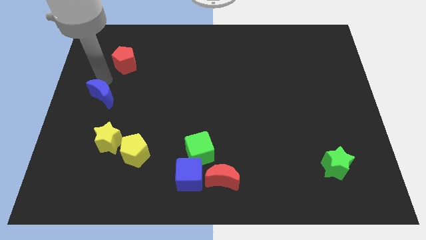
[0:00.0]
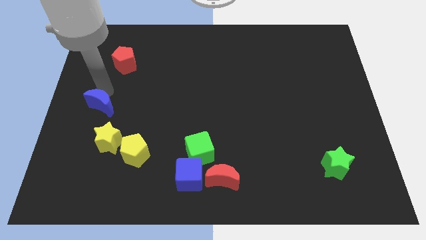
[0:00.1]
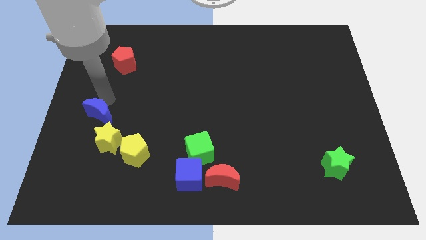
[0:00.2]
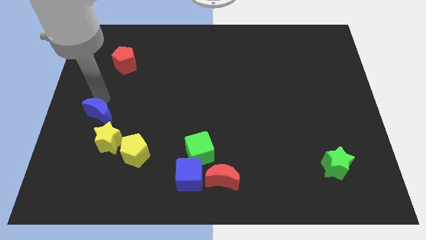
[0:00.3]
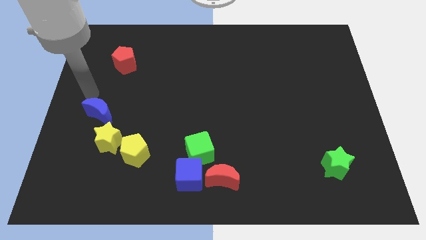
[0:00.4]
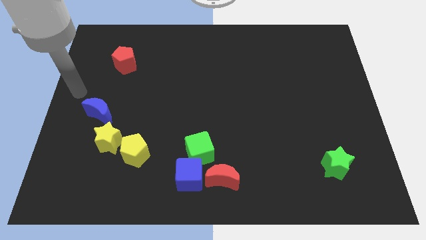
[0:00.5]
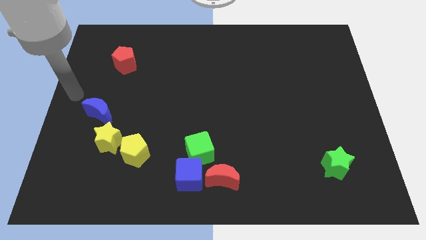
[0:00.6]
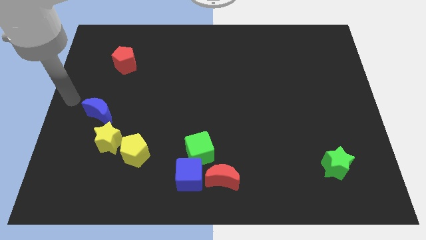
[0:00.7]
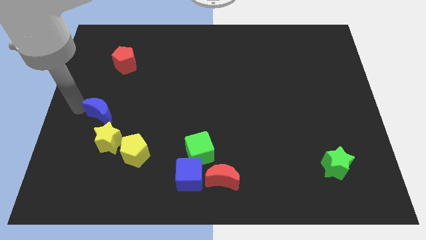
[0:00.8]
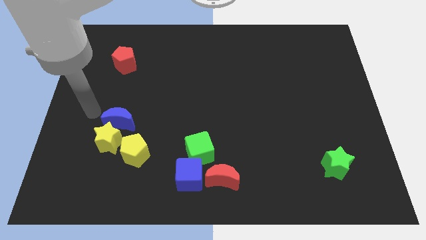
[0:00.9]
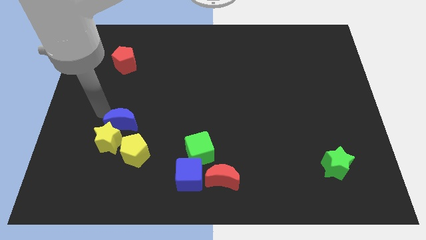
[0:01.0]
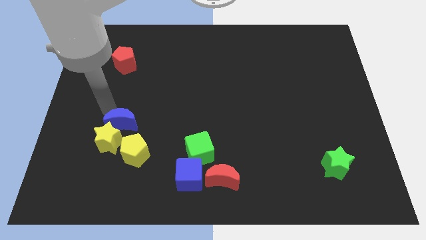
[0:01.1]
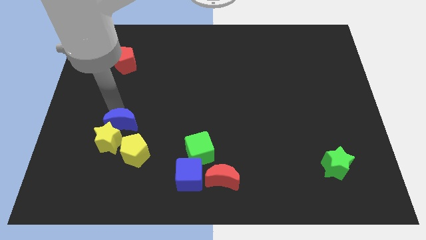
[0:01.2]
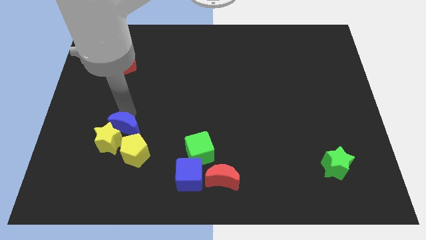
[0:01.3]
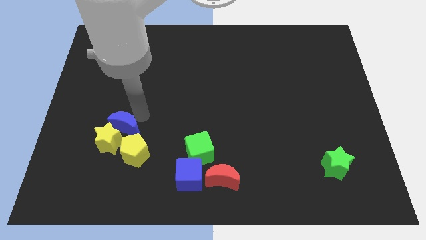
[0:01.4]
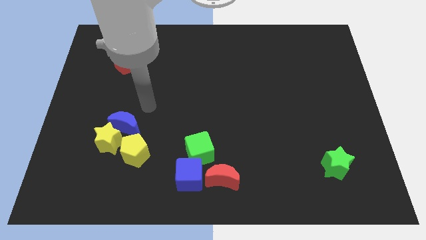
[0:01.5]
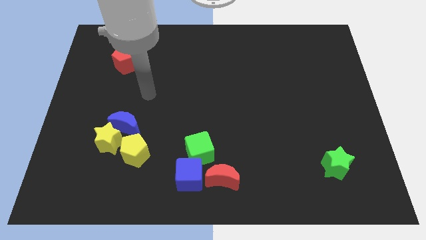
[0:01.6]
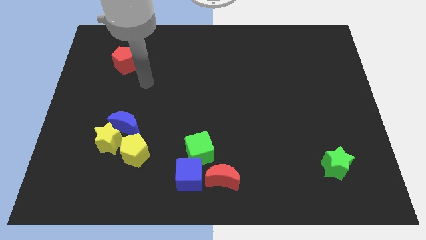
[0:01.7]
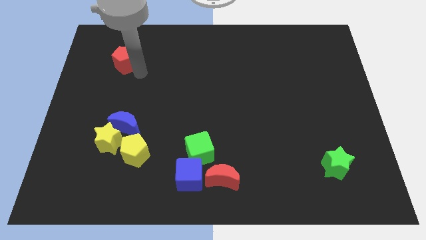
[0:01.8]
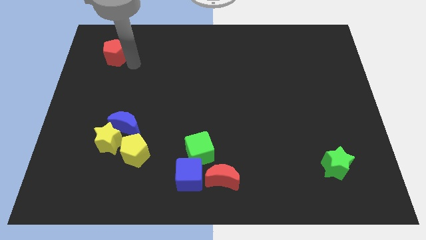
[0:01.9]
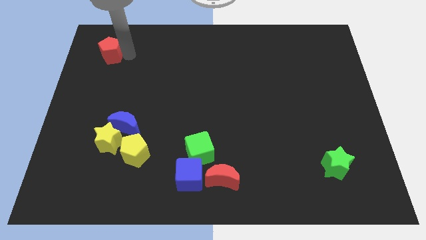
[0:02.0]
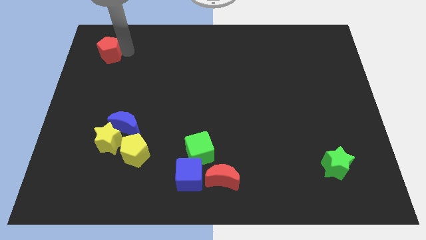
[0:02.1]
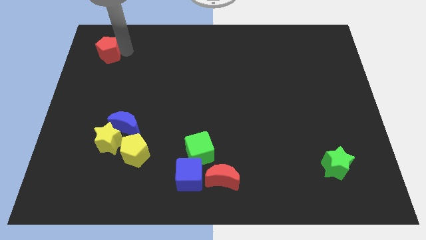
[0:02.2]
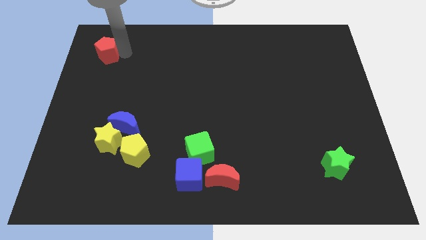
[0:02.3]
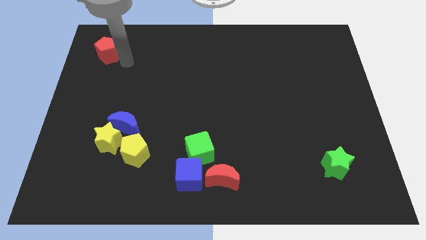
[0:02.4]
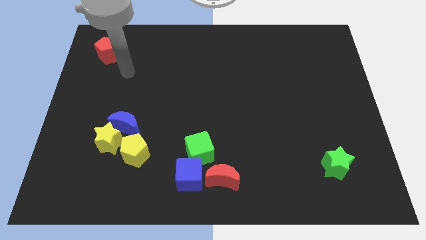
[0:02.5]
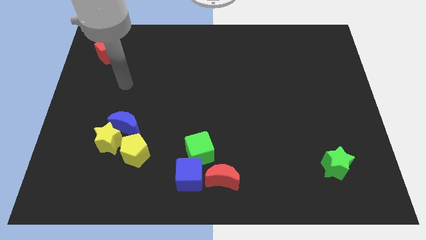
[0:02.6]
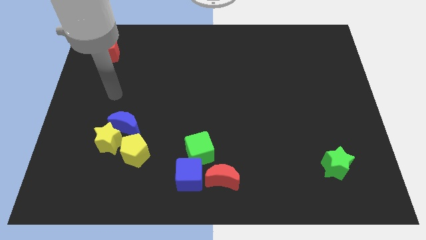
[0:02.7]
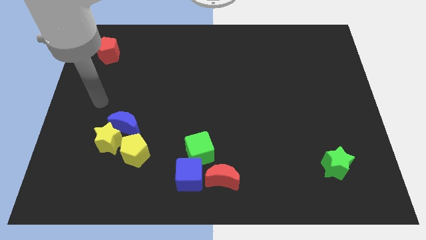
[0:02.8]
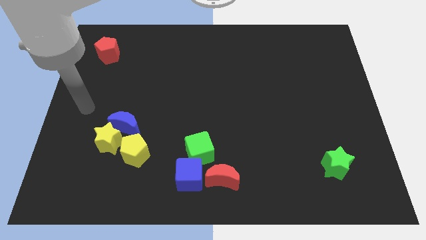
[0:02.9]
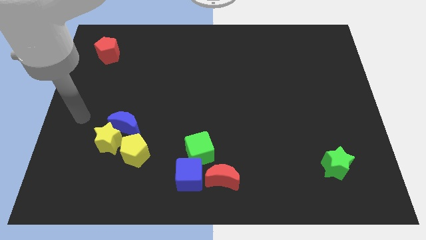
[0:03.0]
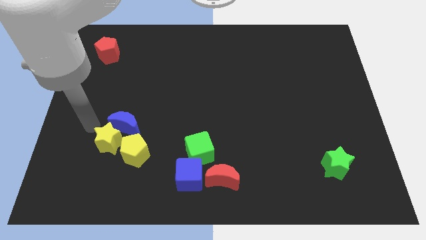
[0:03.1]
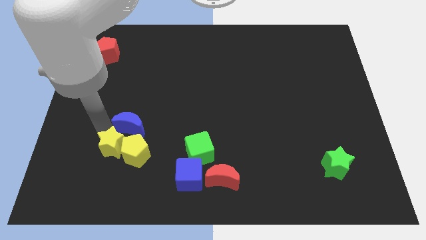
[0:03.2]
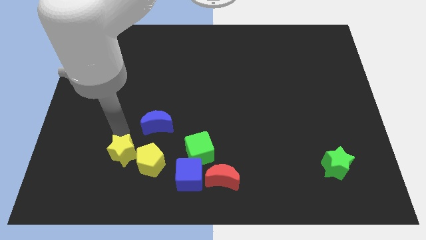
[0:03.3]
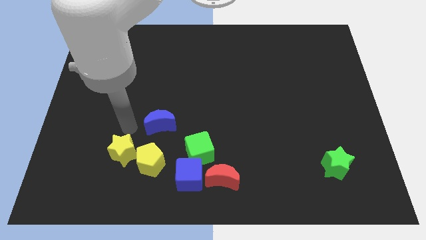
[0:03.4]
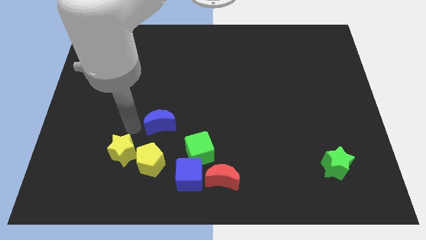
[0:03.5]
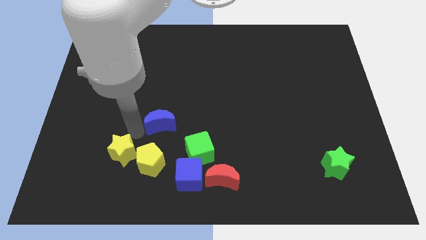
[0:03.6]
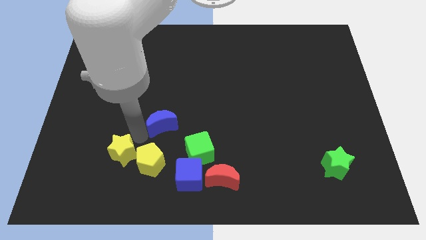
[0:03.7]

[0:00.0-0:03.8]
push blue crescent to the bottom left

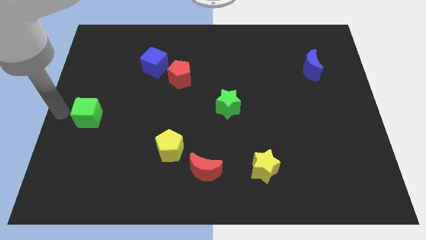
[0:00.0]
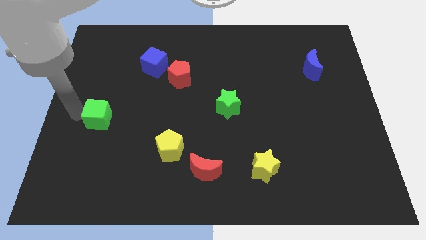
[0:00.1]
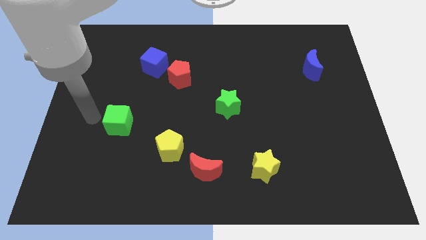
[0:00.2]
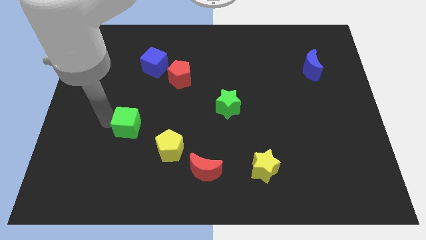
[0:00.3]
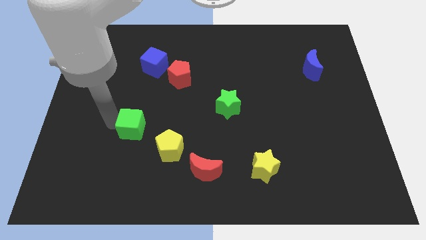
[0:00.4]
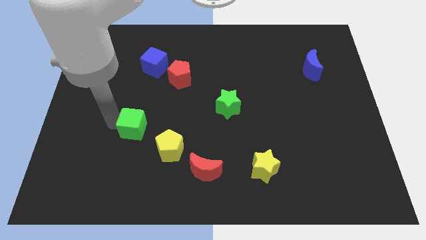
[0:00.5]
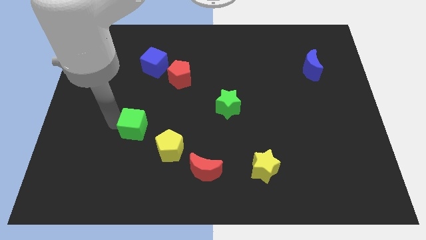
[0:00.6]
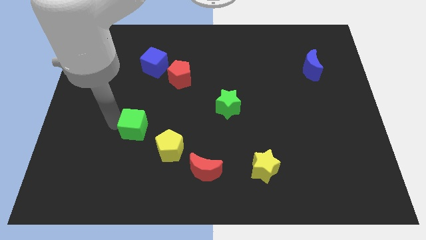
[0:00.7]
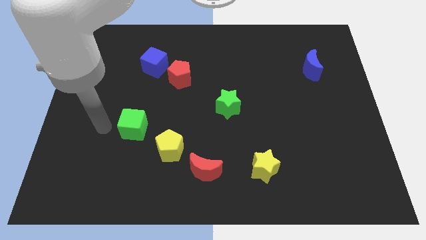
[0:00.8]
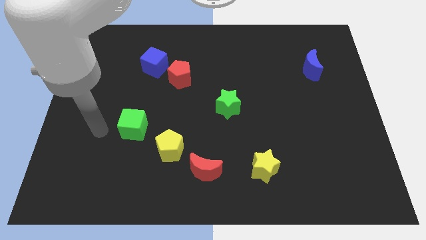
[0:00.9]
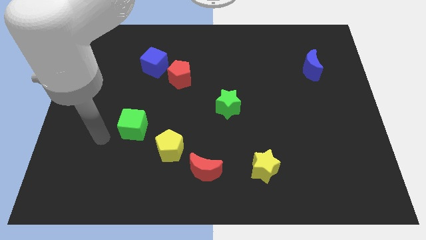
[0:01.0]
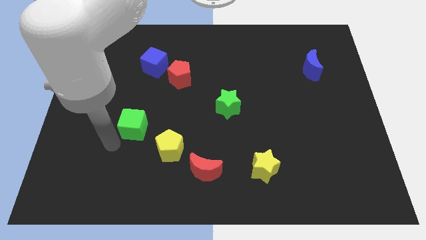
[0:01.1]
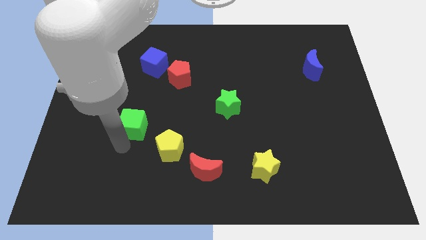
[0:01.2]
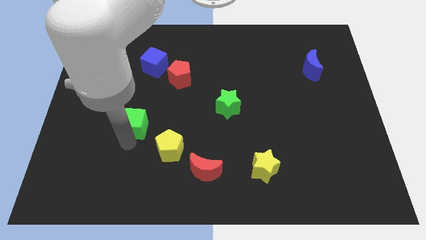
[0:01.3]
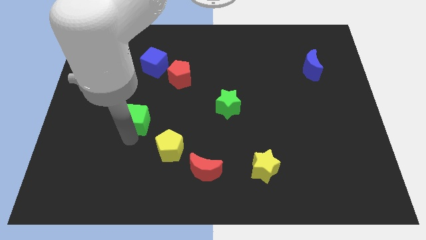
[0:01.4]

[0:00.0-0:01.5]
place green cube below blue cube

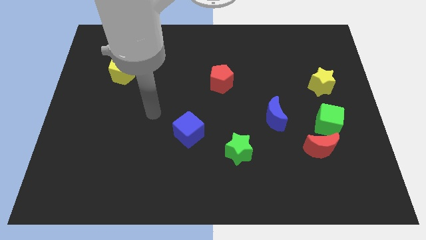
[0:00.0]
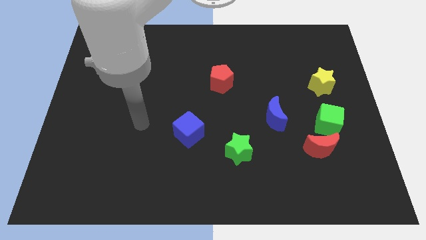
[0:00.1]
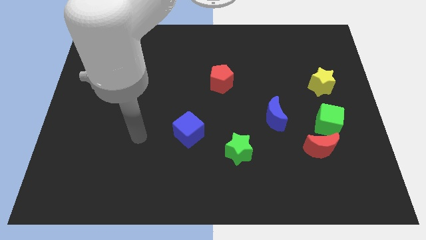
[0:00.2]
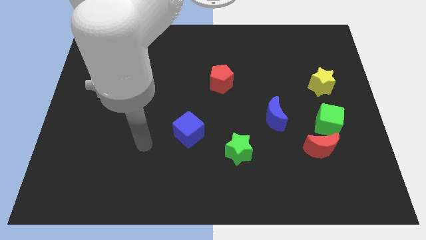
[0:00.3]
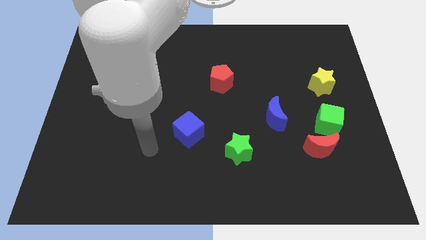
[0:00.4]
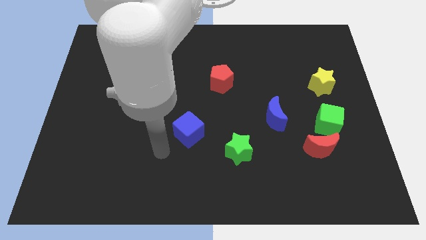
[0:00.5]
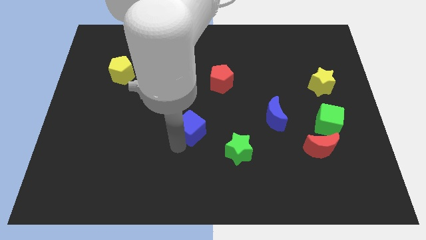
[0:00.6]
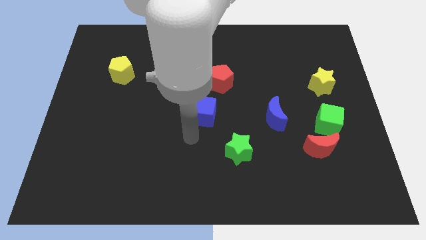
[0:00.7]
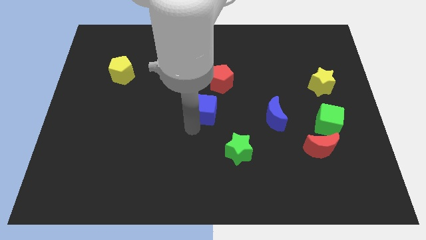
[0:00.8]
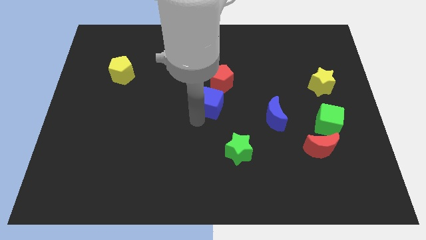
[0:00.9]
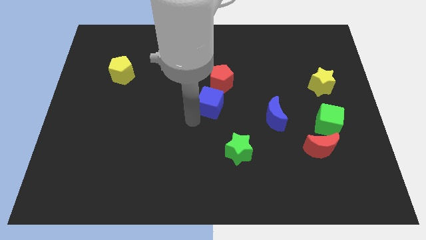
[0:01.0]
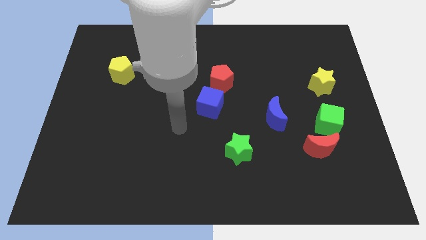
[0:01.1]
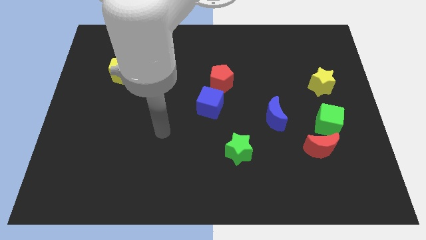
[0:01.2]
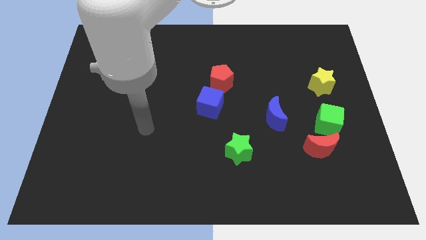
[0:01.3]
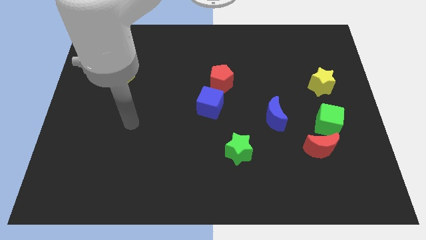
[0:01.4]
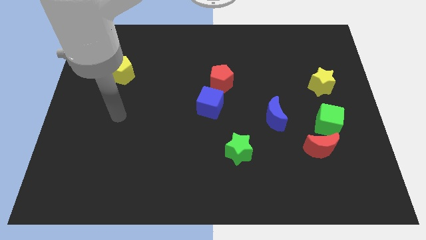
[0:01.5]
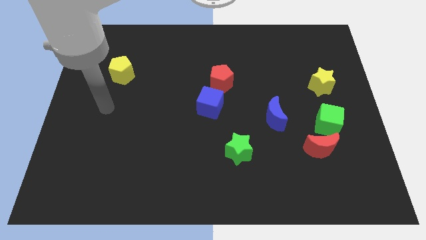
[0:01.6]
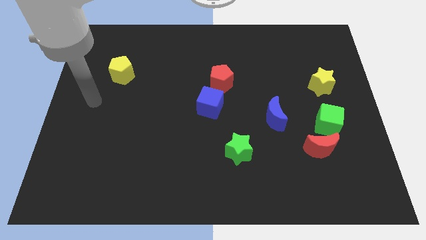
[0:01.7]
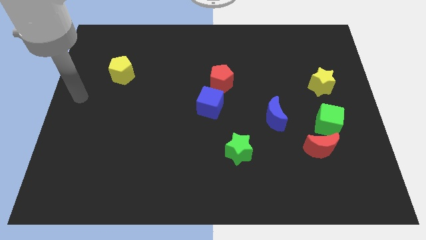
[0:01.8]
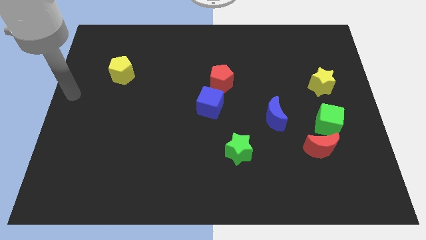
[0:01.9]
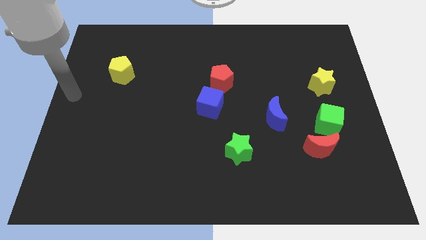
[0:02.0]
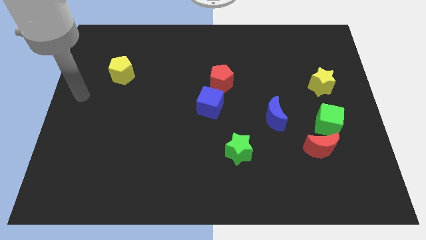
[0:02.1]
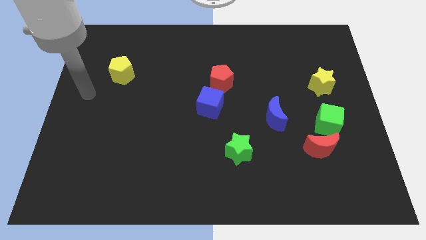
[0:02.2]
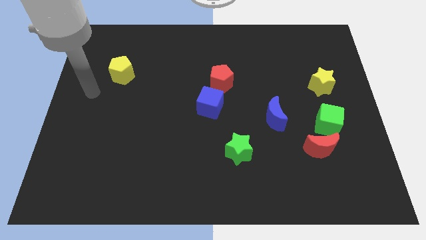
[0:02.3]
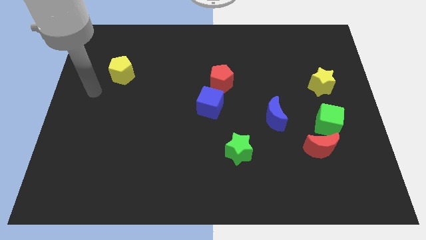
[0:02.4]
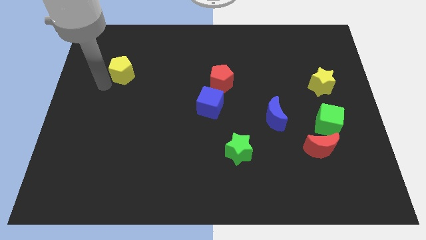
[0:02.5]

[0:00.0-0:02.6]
push the blue cube towards the red pentagon

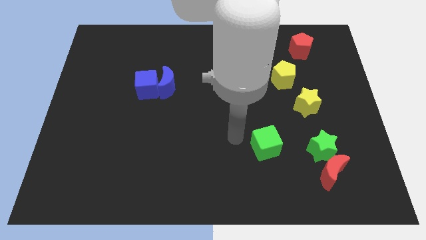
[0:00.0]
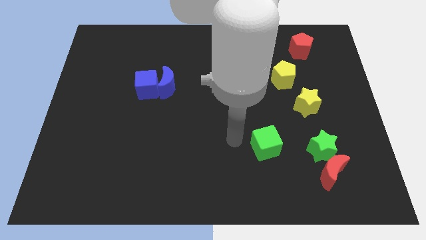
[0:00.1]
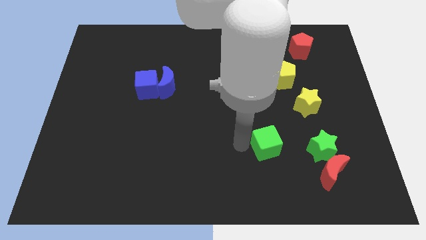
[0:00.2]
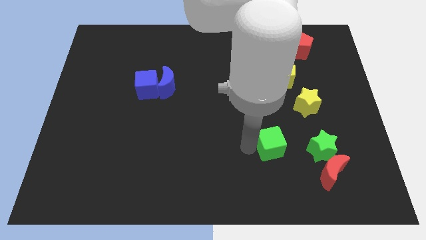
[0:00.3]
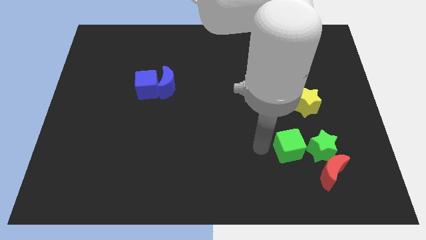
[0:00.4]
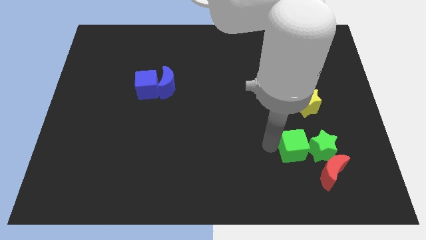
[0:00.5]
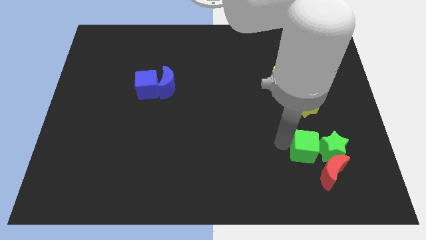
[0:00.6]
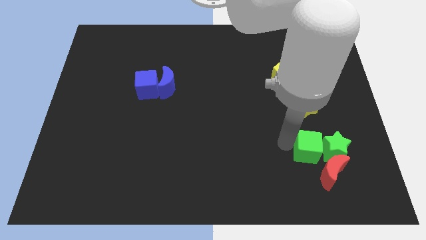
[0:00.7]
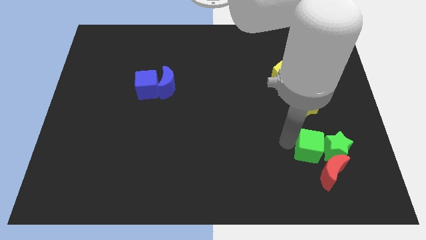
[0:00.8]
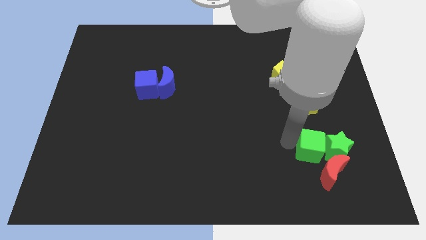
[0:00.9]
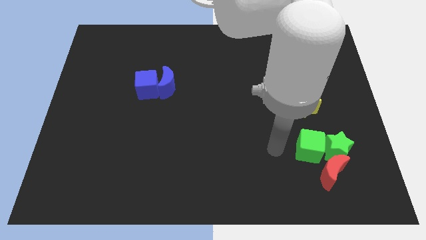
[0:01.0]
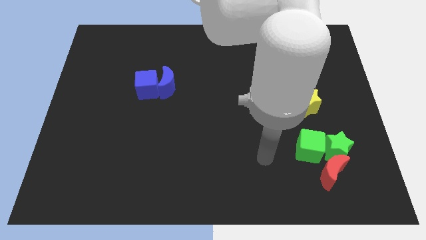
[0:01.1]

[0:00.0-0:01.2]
push the green cube into the green star
